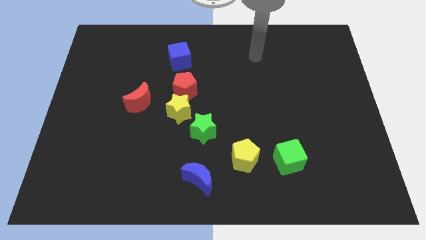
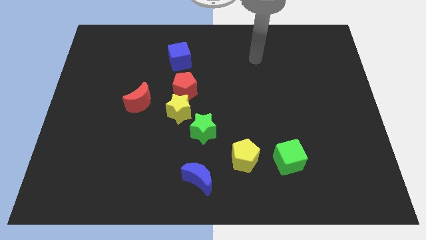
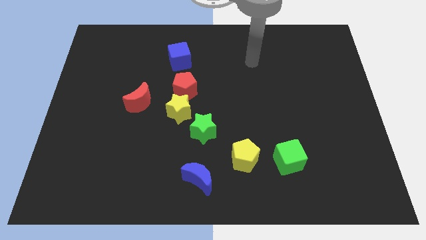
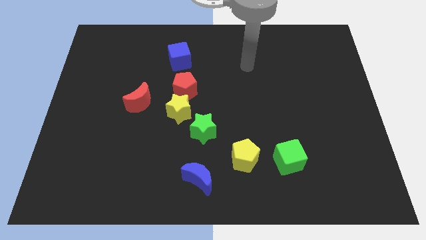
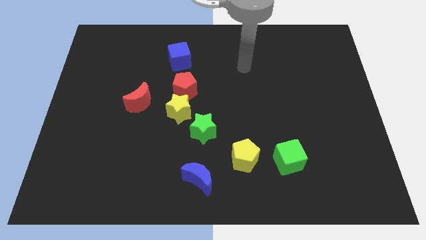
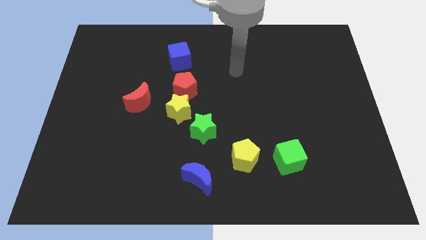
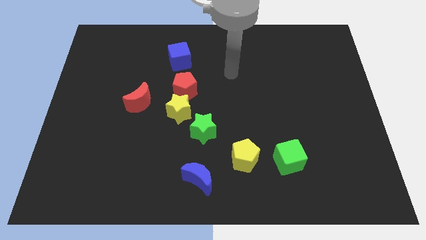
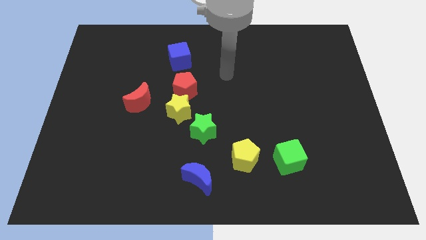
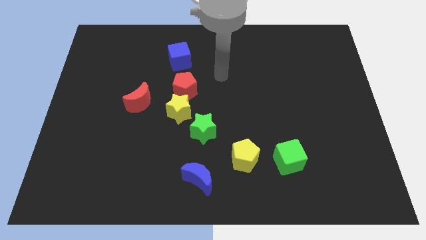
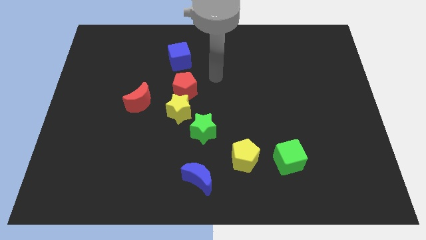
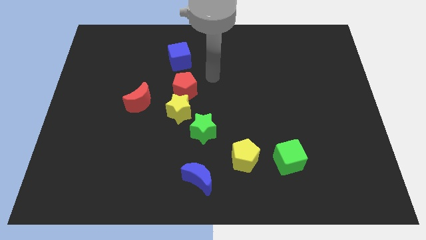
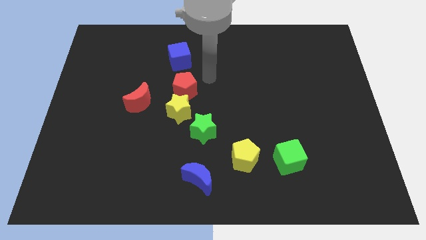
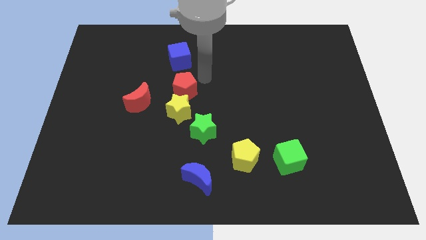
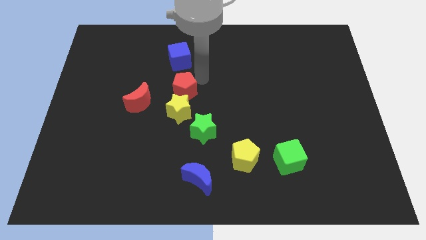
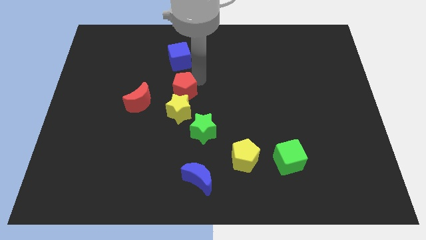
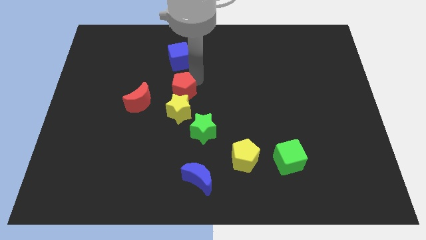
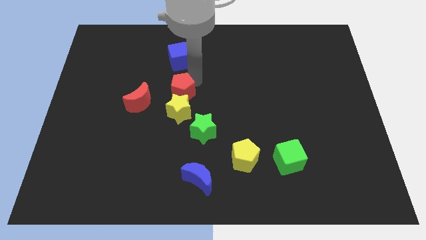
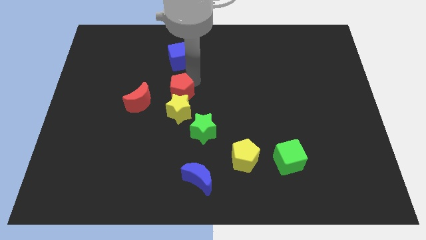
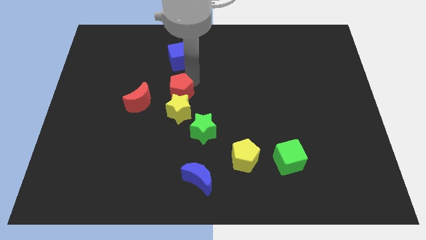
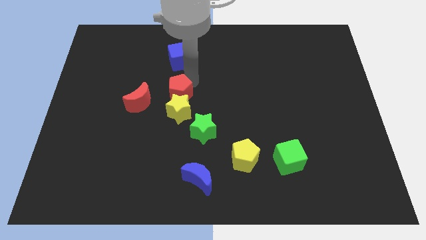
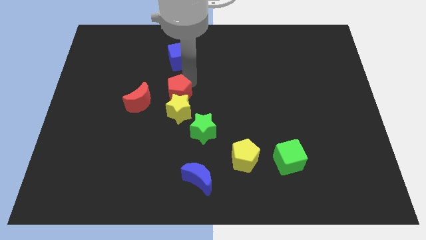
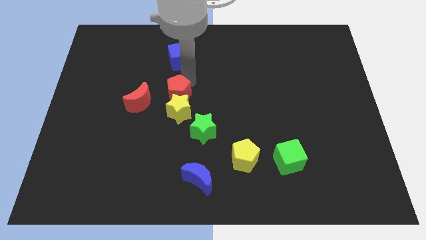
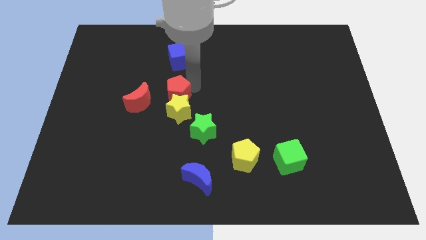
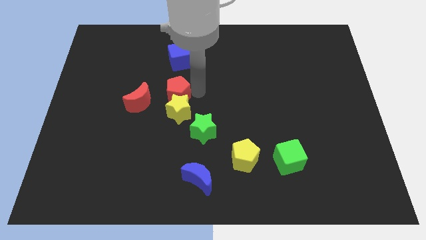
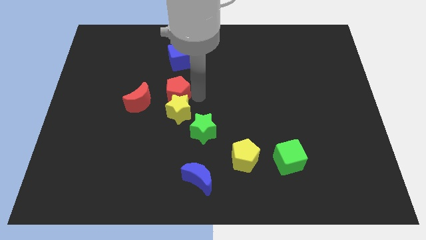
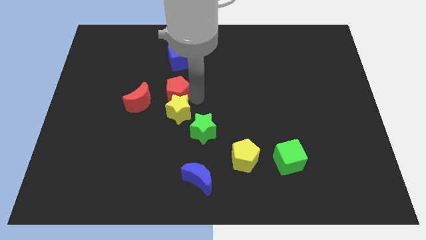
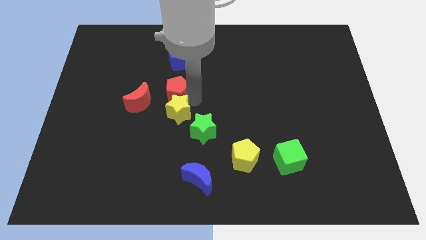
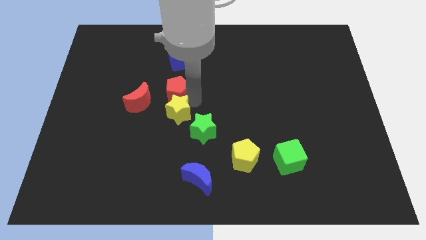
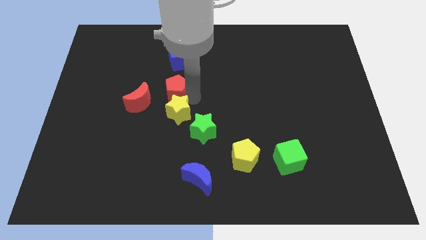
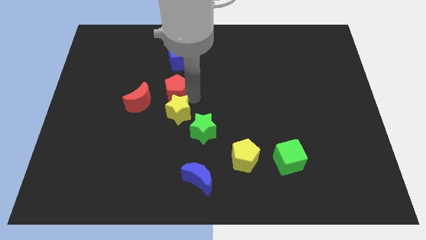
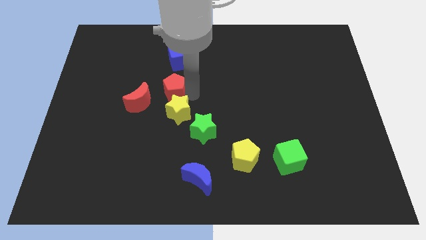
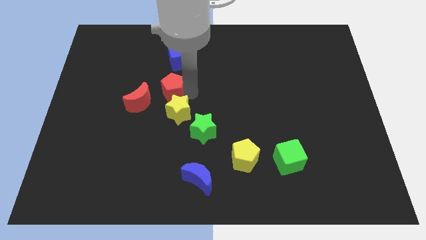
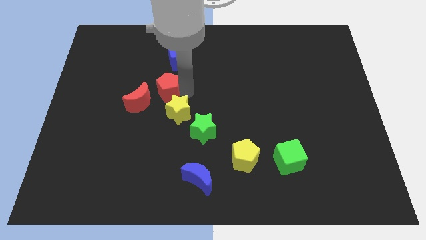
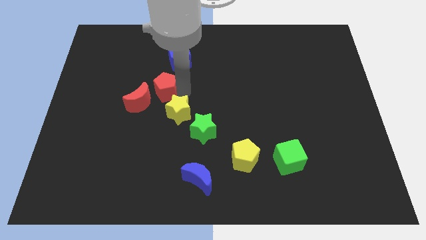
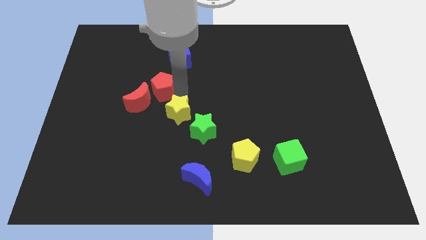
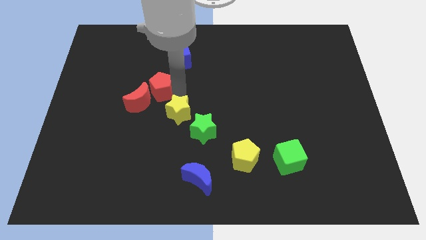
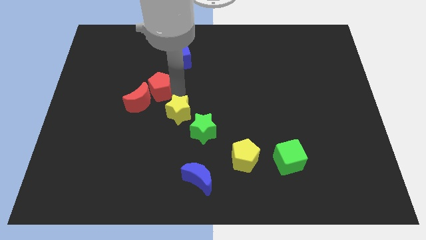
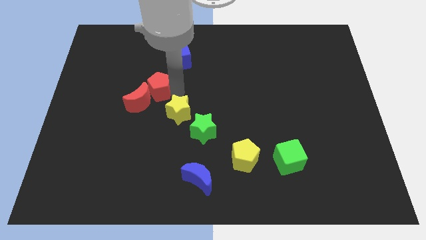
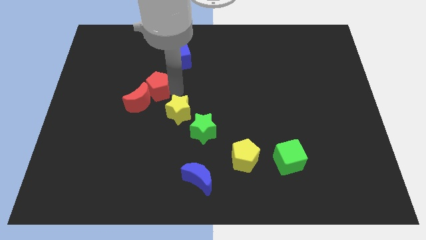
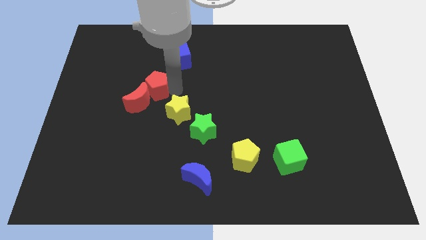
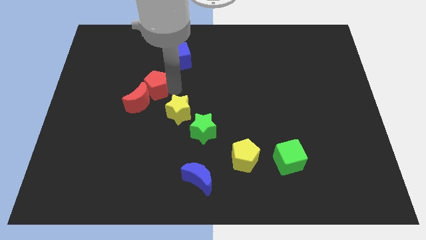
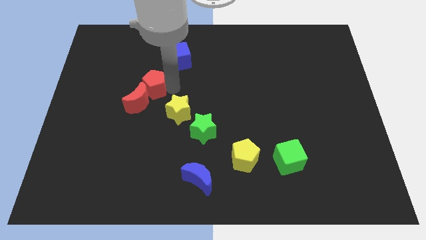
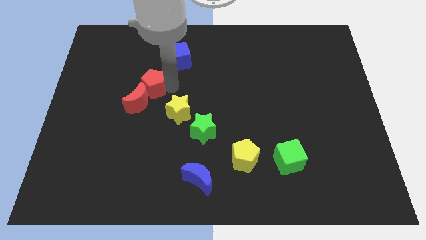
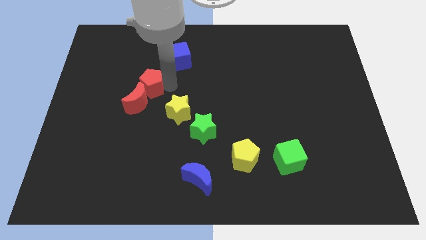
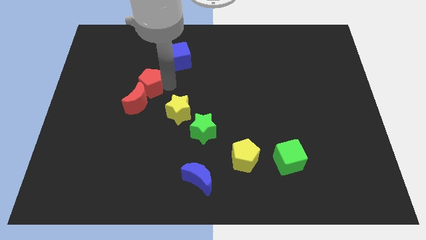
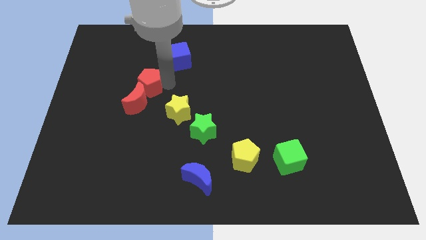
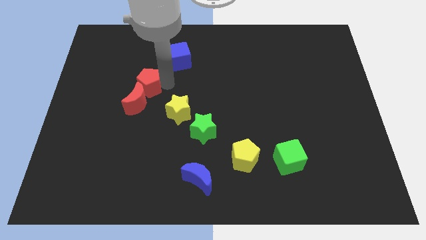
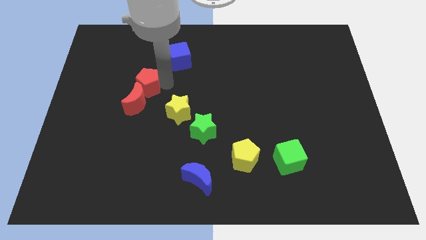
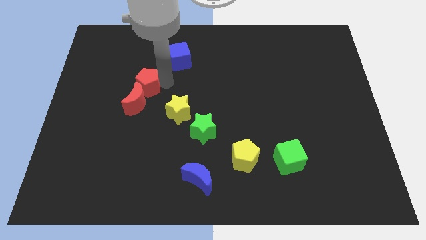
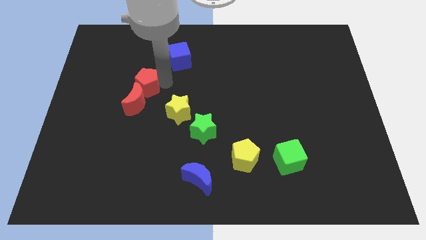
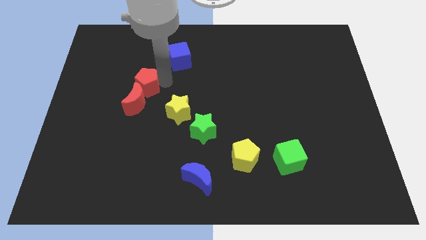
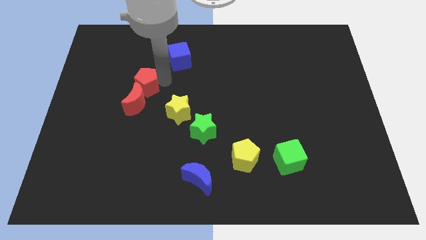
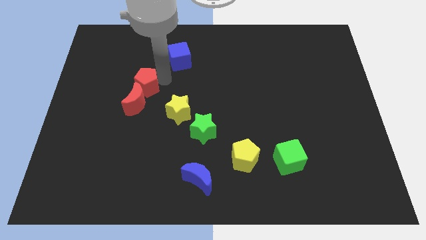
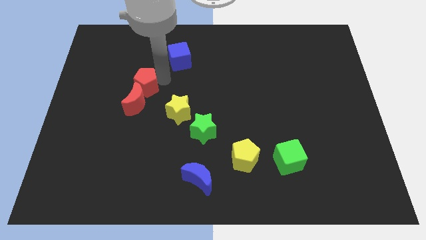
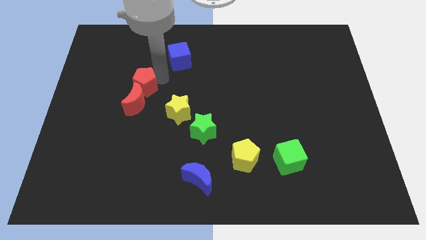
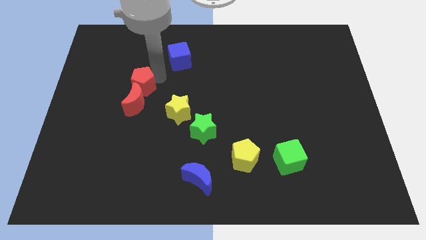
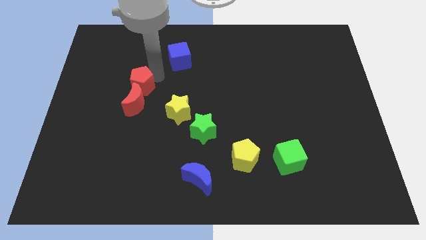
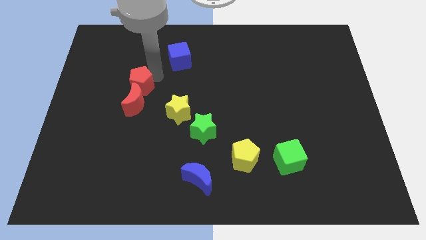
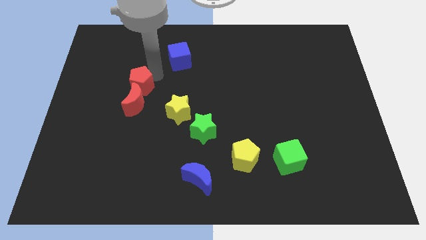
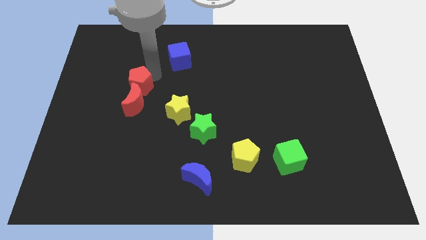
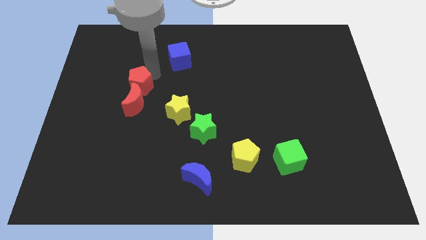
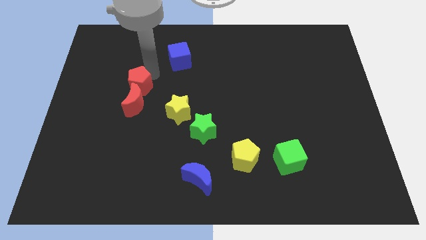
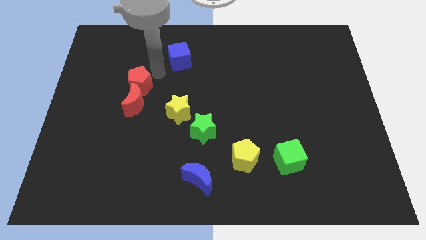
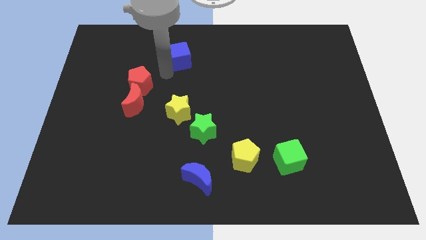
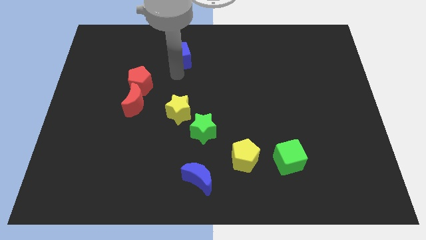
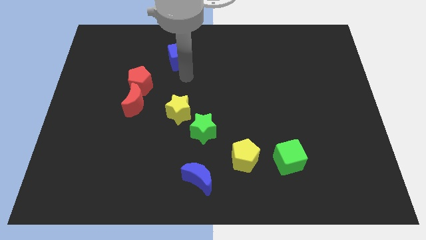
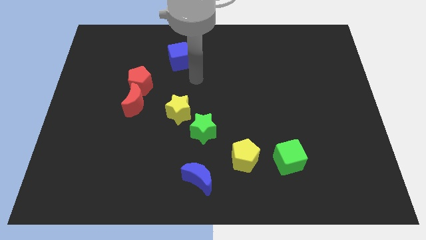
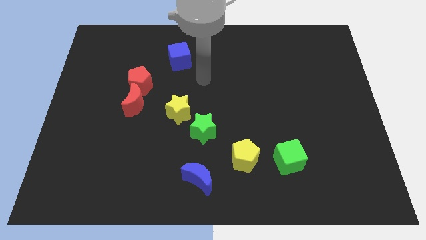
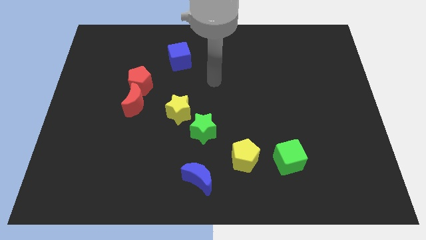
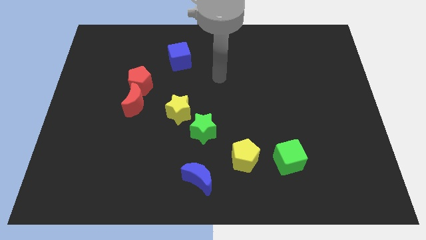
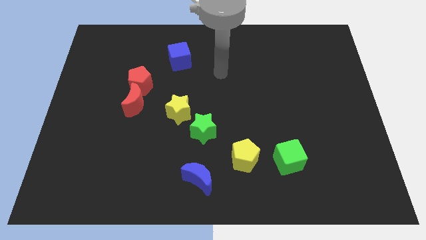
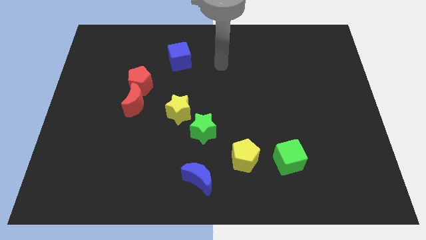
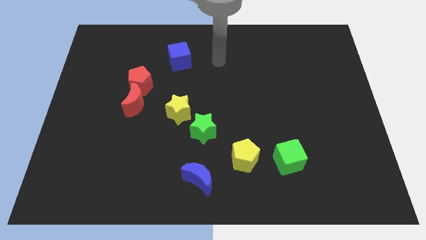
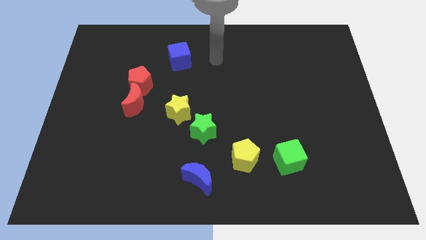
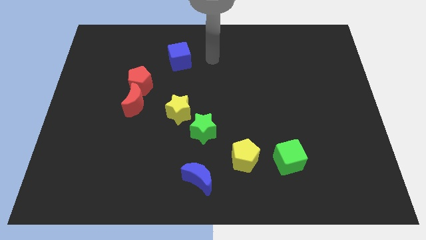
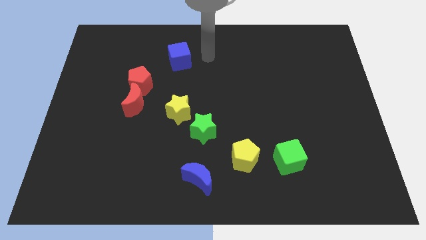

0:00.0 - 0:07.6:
move the red pentagon above the red crescent

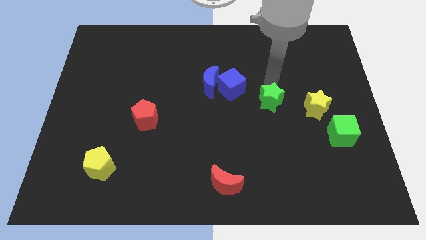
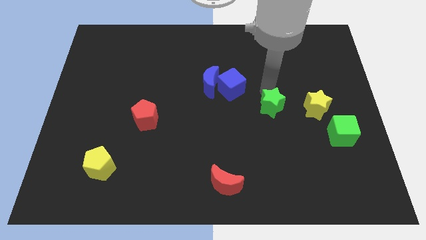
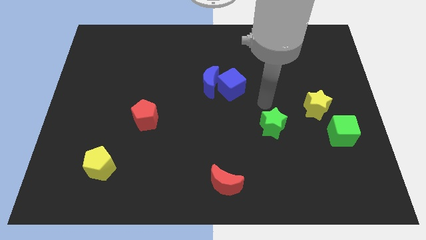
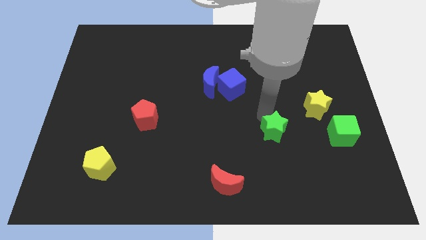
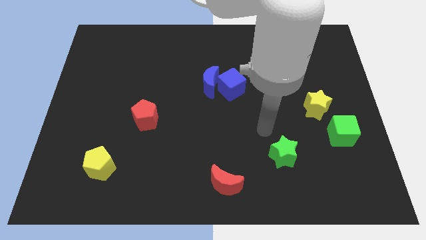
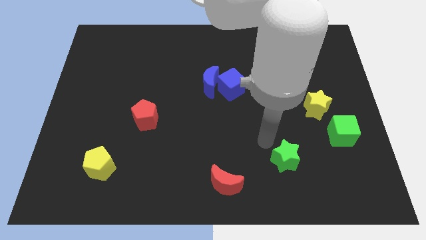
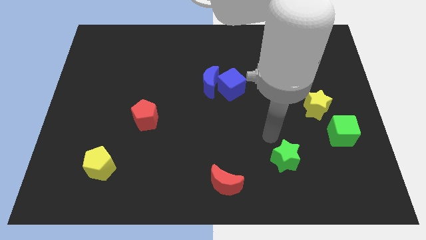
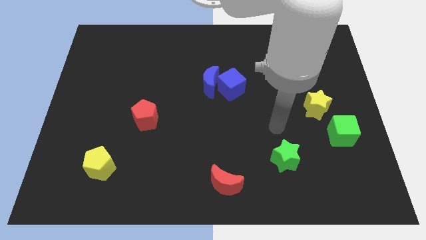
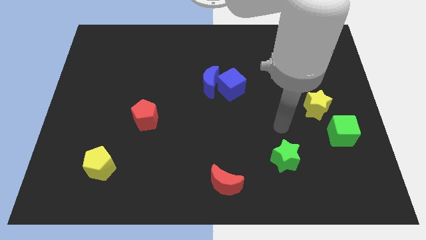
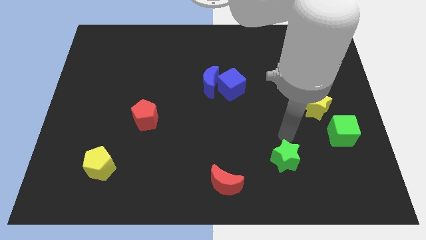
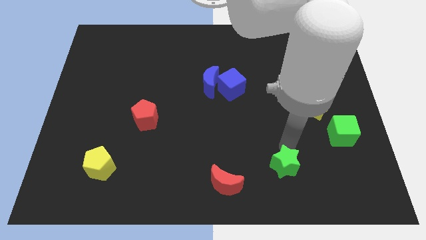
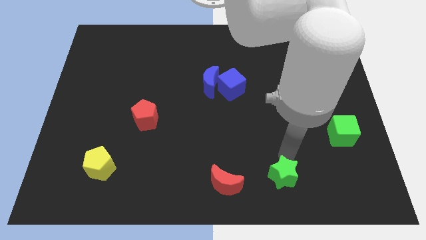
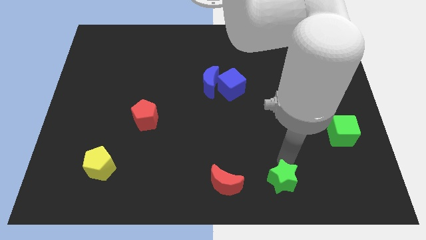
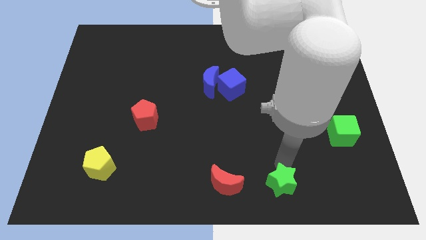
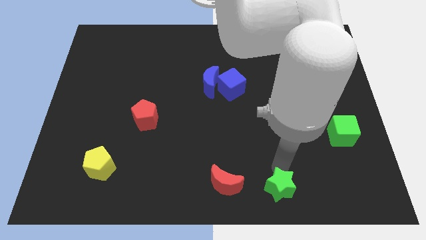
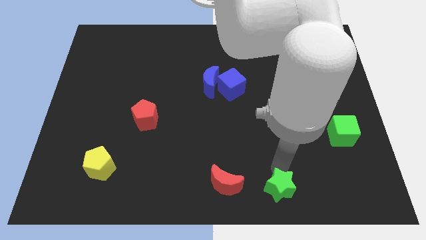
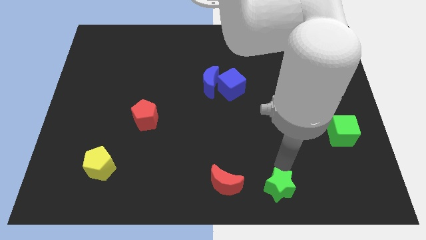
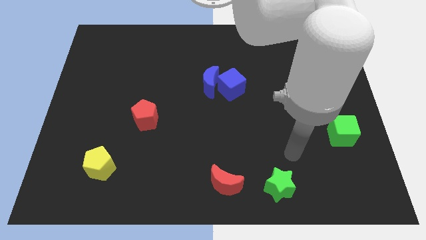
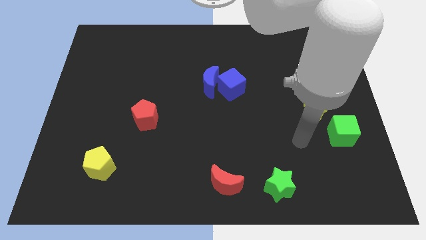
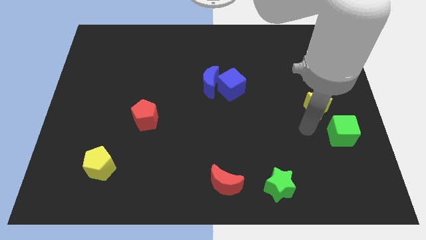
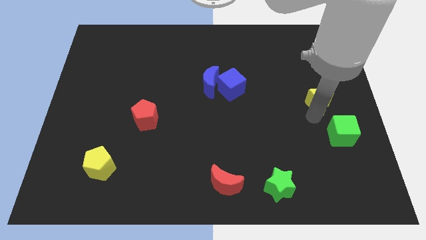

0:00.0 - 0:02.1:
push the green star diagonal to the right of the red crescent
